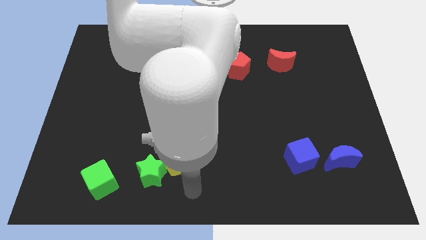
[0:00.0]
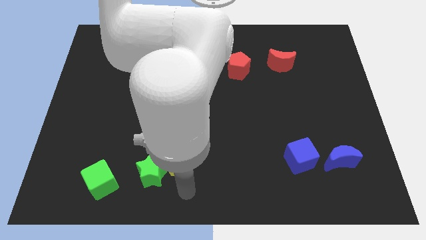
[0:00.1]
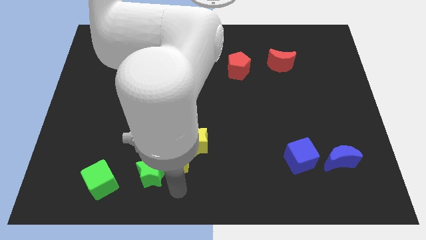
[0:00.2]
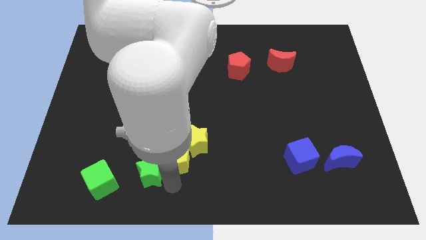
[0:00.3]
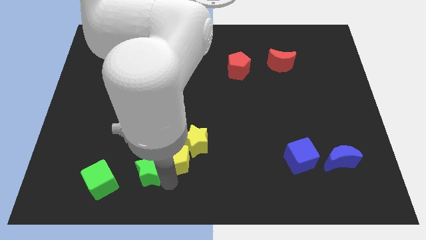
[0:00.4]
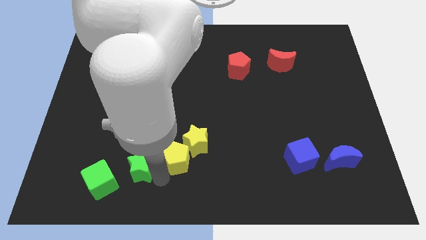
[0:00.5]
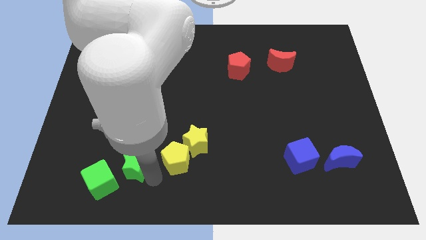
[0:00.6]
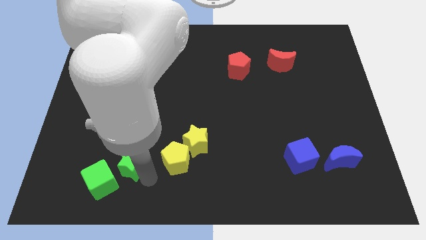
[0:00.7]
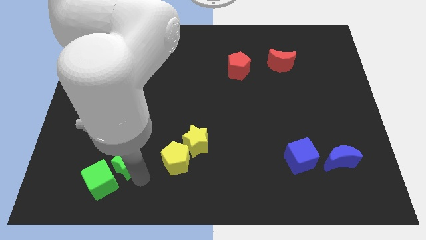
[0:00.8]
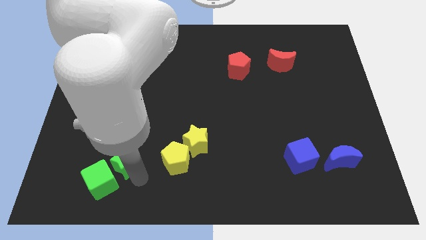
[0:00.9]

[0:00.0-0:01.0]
push the green star to the left of the yellow pentagon

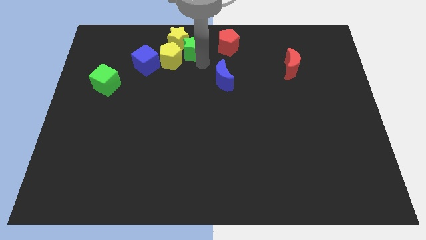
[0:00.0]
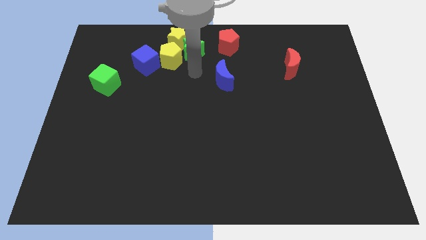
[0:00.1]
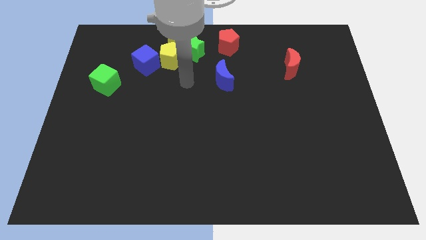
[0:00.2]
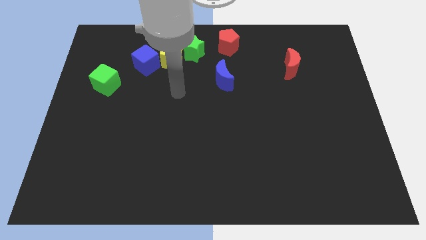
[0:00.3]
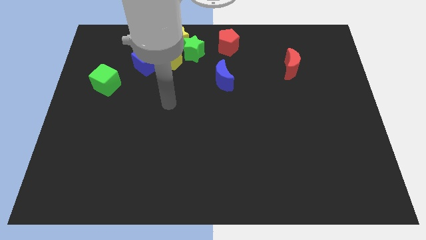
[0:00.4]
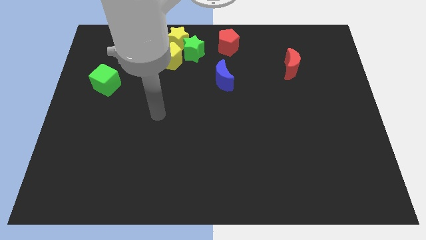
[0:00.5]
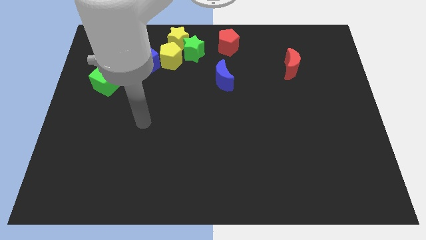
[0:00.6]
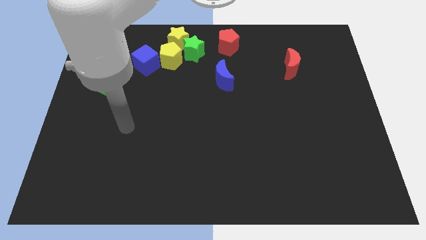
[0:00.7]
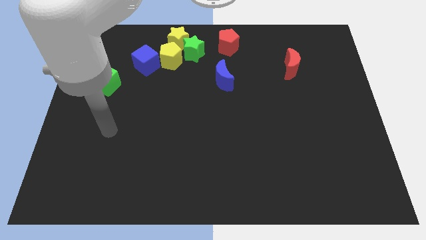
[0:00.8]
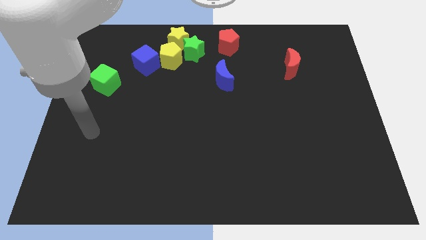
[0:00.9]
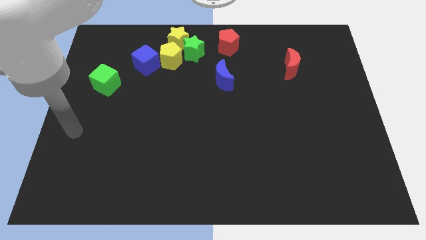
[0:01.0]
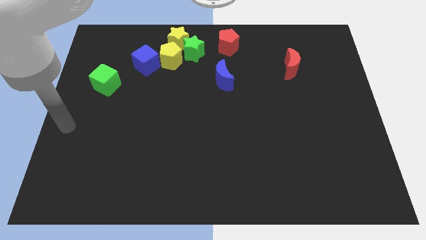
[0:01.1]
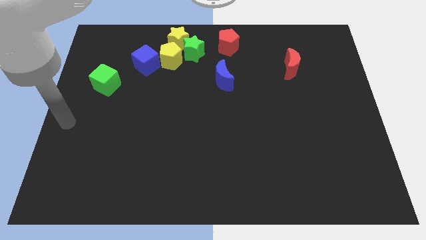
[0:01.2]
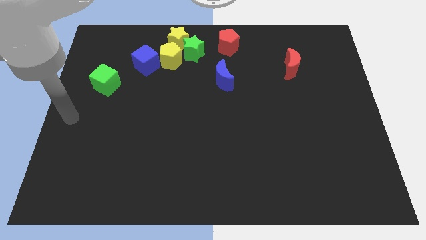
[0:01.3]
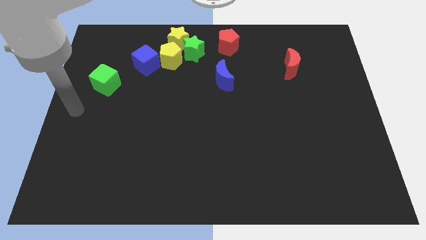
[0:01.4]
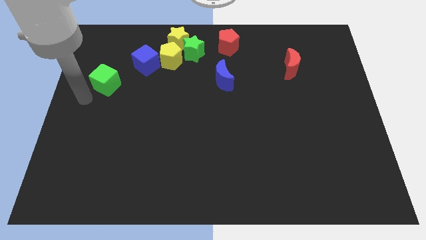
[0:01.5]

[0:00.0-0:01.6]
move your arm close to the green cube

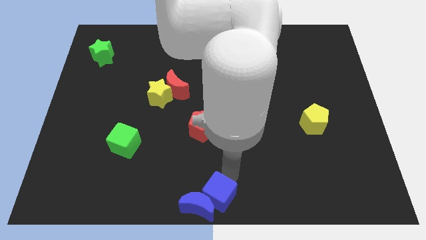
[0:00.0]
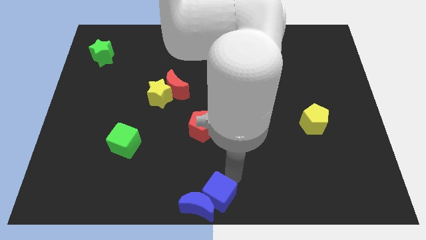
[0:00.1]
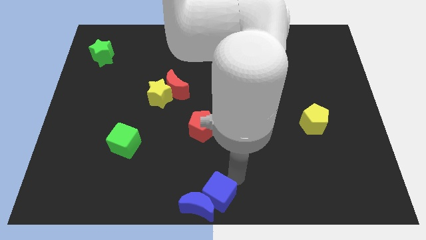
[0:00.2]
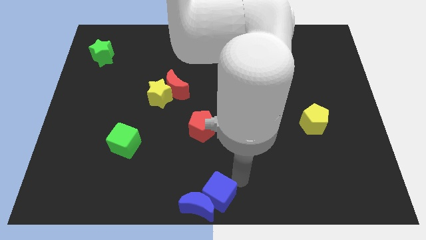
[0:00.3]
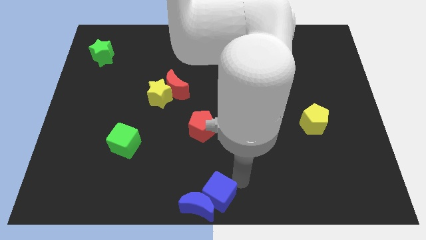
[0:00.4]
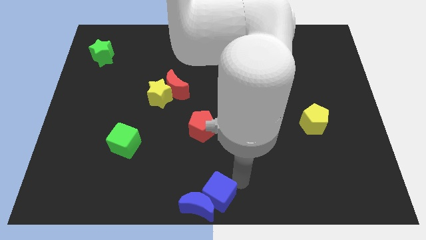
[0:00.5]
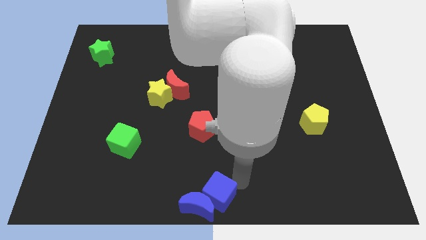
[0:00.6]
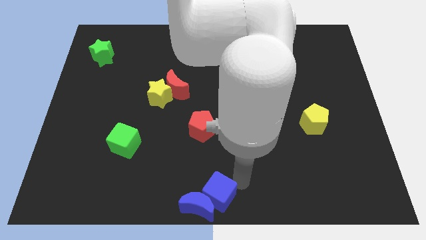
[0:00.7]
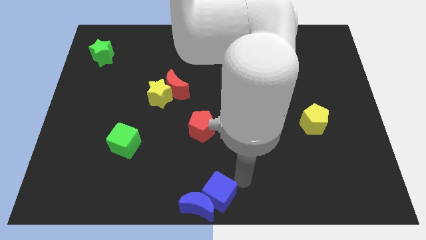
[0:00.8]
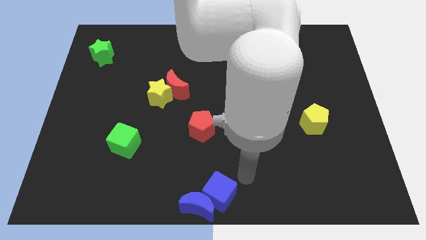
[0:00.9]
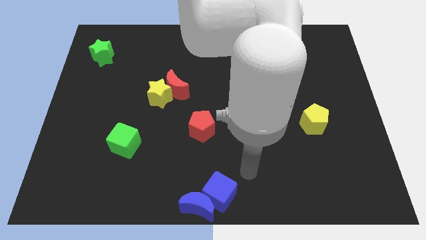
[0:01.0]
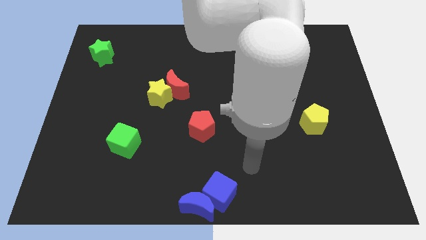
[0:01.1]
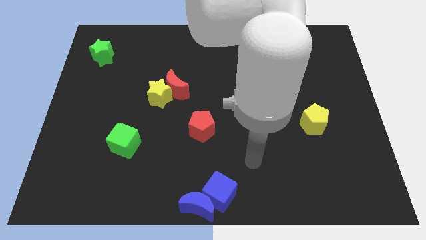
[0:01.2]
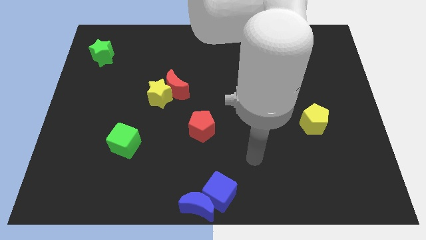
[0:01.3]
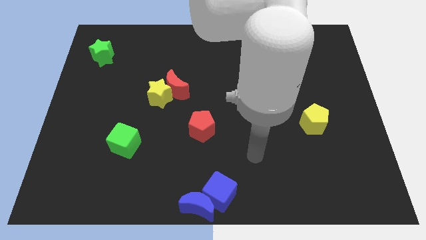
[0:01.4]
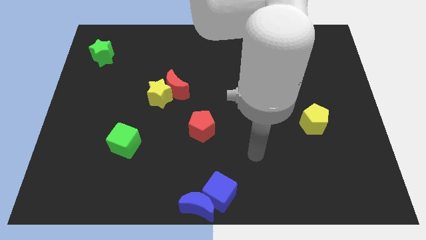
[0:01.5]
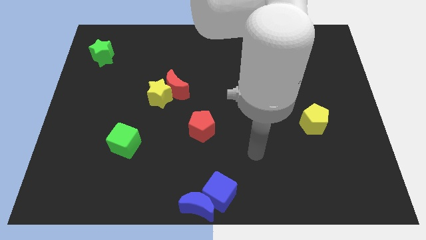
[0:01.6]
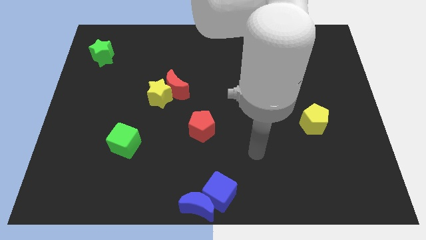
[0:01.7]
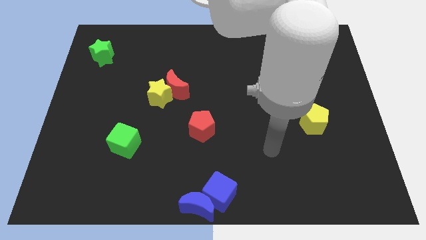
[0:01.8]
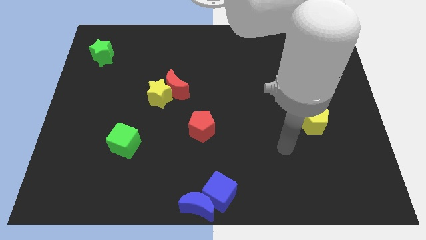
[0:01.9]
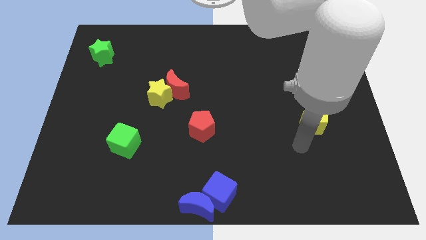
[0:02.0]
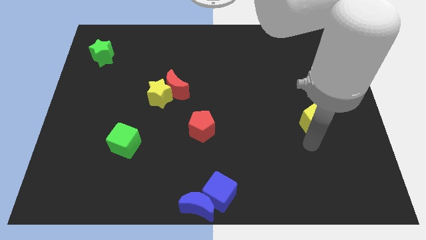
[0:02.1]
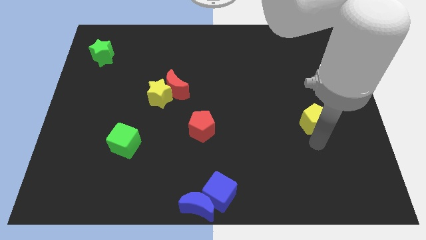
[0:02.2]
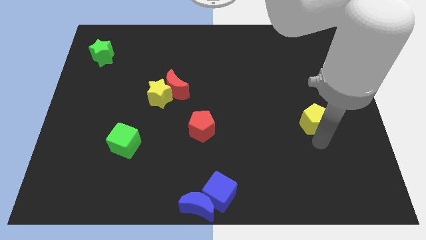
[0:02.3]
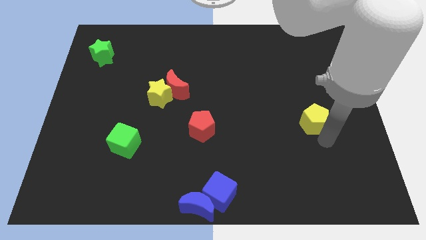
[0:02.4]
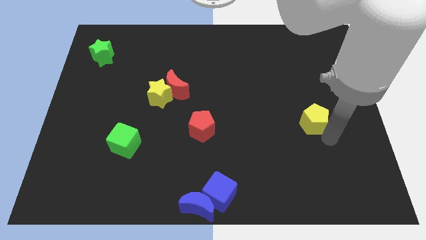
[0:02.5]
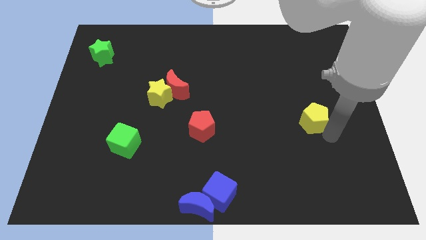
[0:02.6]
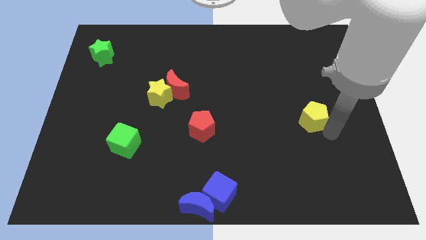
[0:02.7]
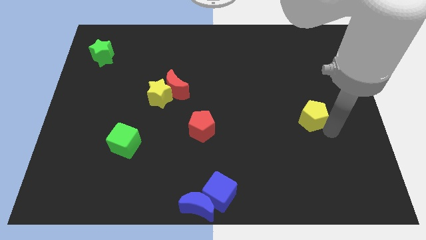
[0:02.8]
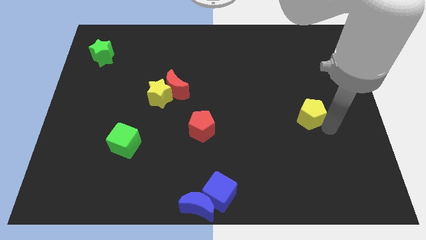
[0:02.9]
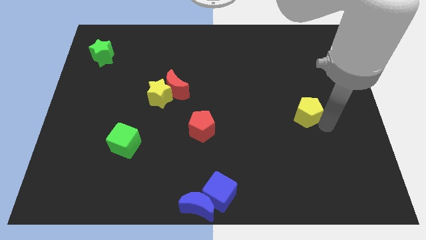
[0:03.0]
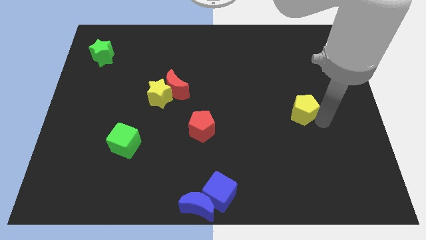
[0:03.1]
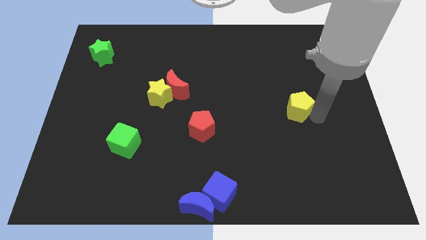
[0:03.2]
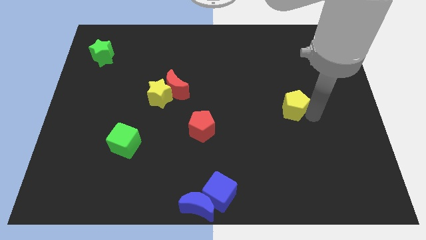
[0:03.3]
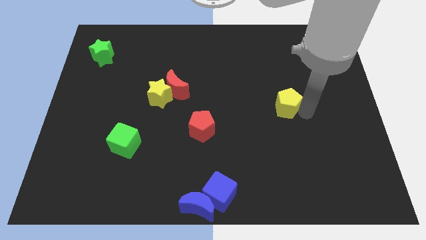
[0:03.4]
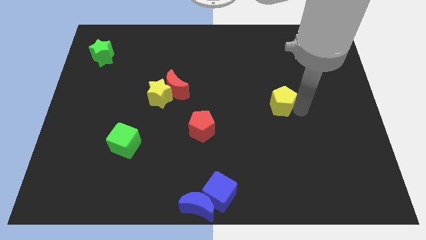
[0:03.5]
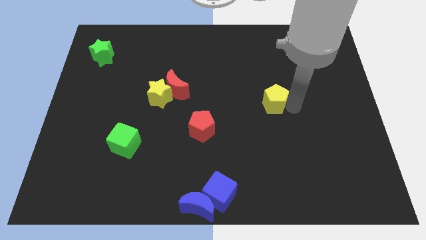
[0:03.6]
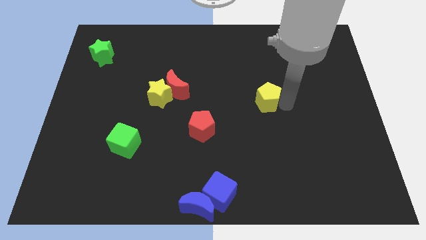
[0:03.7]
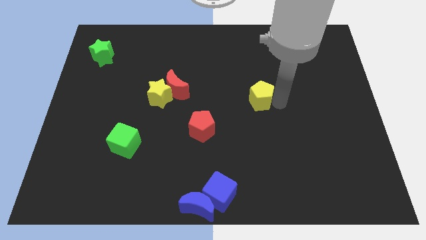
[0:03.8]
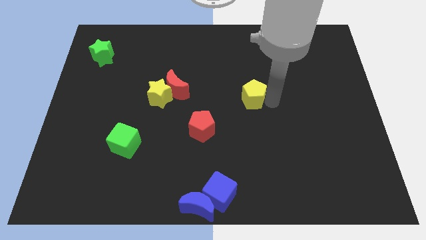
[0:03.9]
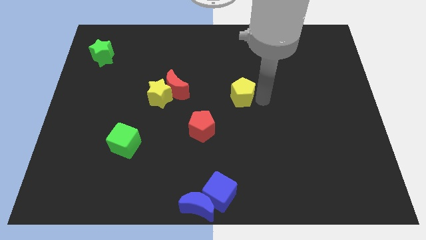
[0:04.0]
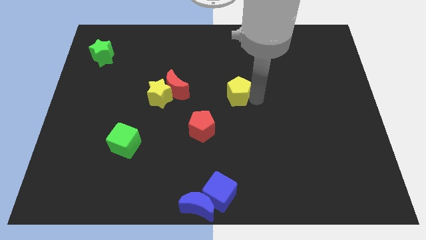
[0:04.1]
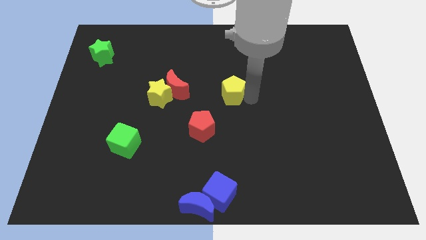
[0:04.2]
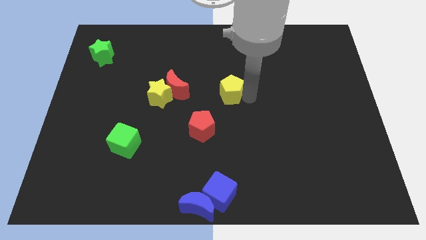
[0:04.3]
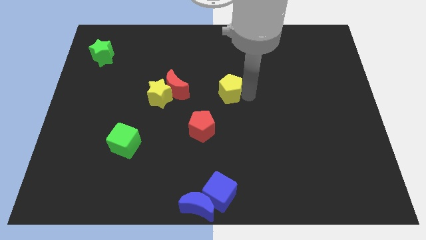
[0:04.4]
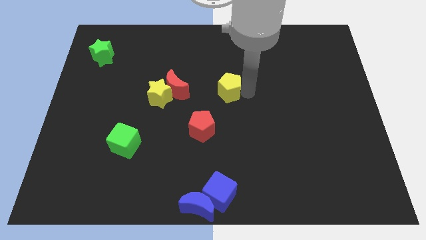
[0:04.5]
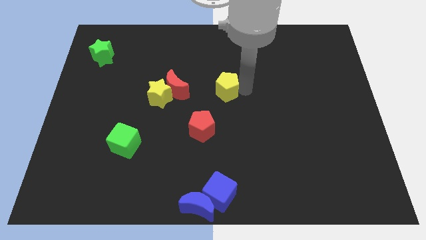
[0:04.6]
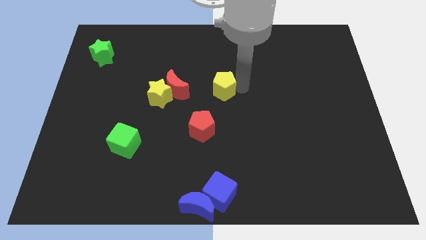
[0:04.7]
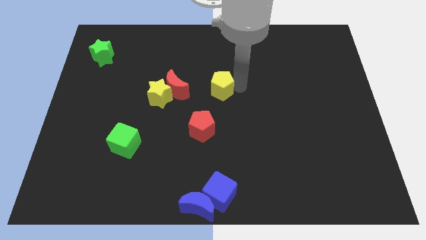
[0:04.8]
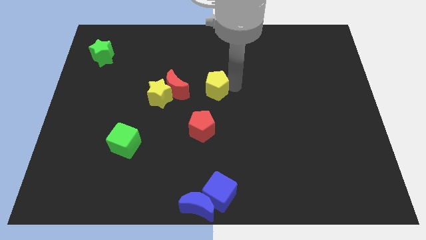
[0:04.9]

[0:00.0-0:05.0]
place the yellow pentagon at the center of the board

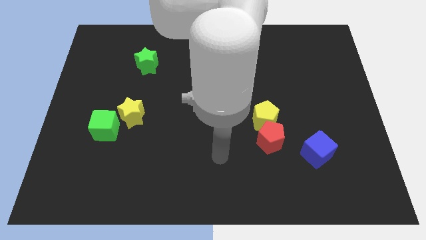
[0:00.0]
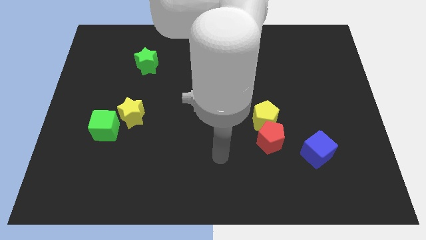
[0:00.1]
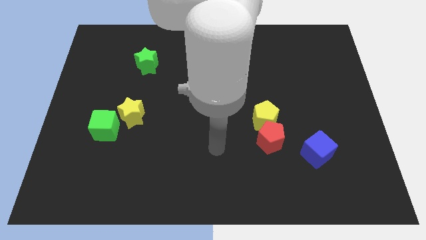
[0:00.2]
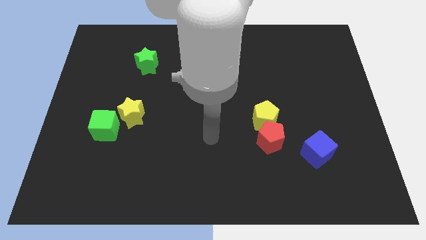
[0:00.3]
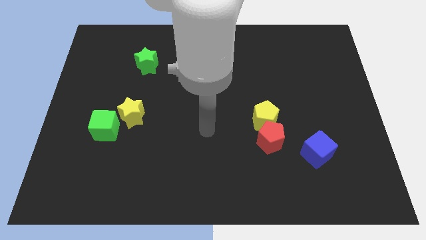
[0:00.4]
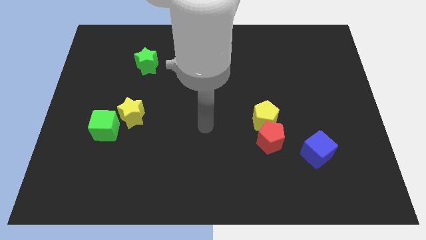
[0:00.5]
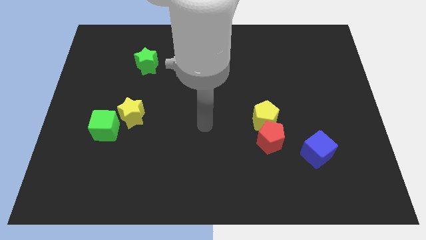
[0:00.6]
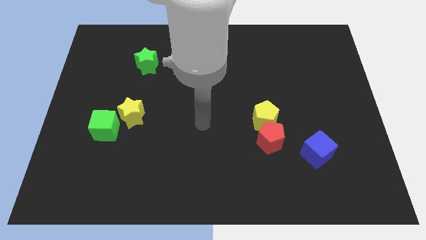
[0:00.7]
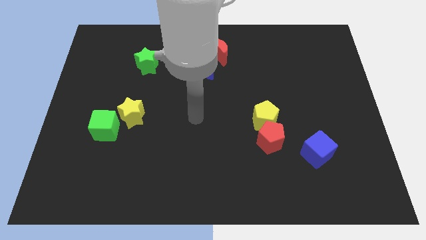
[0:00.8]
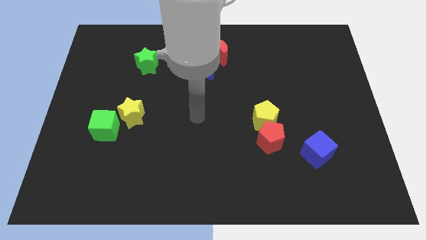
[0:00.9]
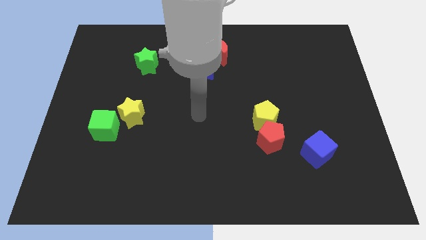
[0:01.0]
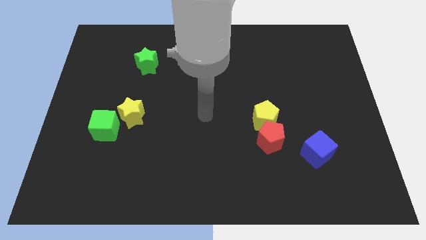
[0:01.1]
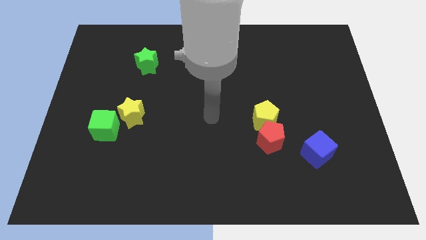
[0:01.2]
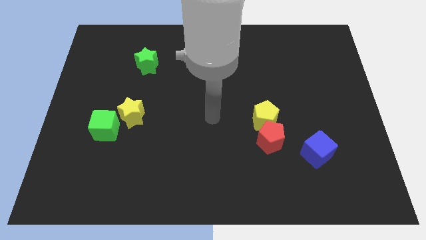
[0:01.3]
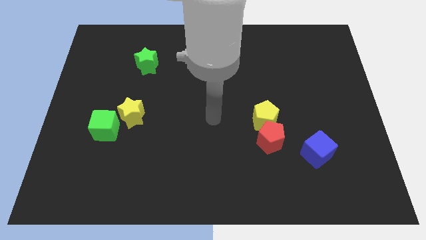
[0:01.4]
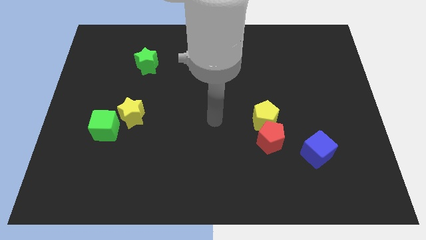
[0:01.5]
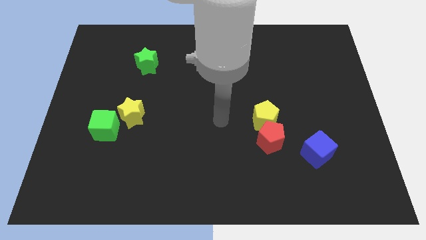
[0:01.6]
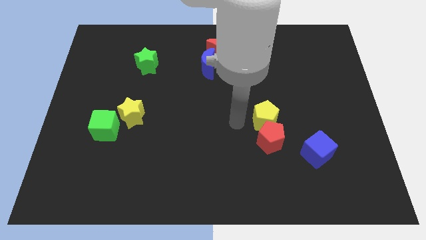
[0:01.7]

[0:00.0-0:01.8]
move the arm to the left of the yellow star
